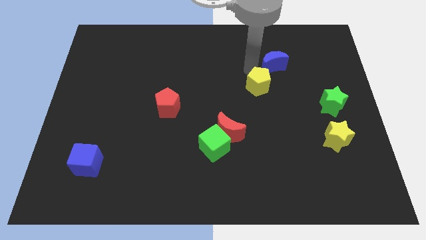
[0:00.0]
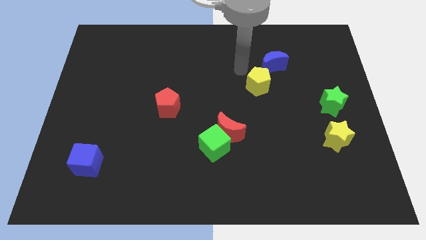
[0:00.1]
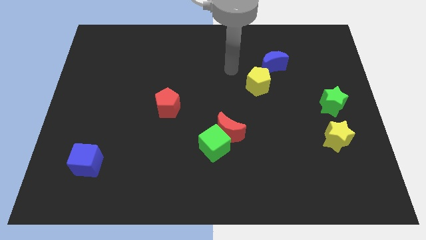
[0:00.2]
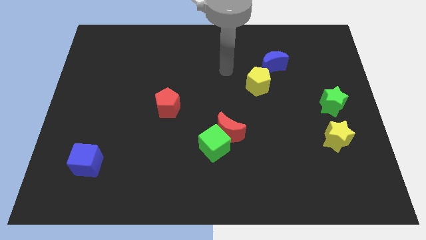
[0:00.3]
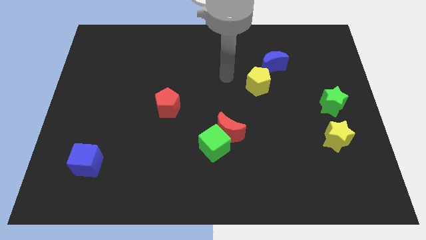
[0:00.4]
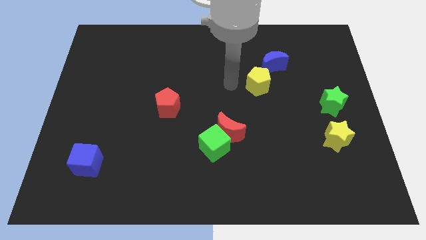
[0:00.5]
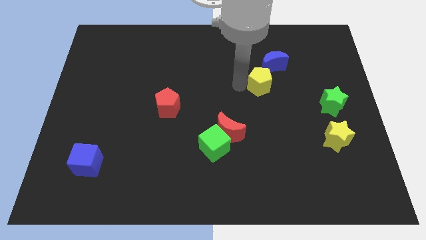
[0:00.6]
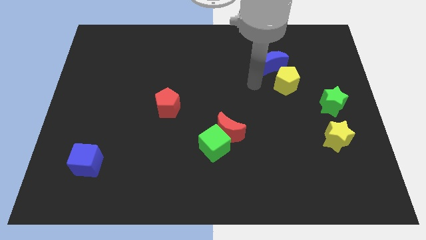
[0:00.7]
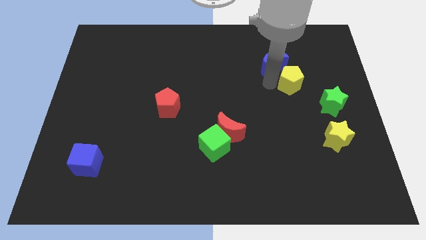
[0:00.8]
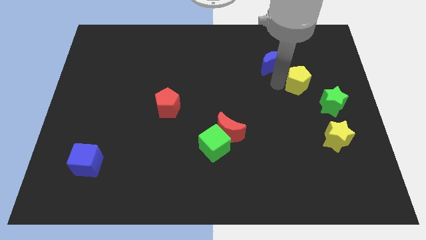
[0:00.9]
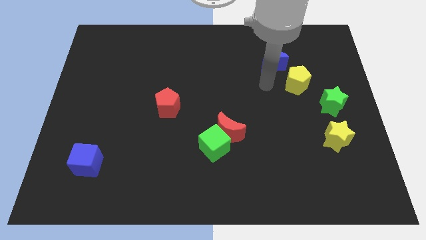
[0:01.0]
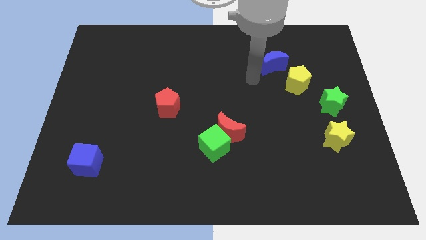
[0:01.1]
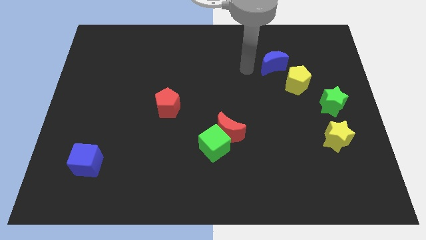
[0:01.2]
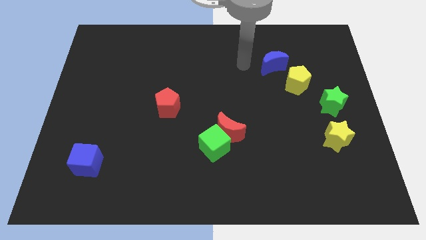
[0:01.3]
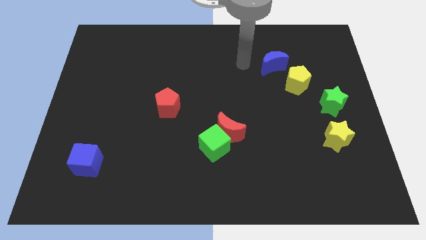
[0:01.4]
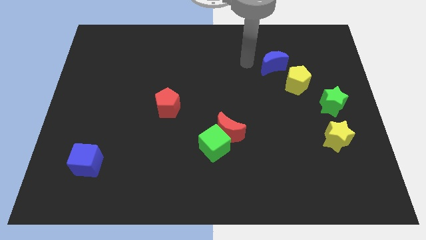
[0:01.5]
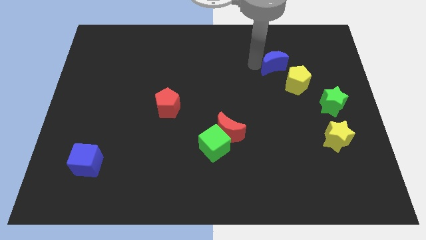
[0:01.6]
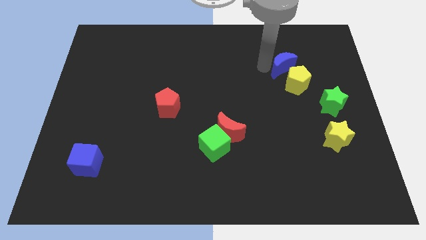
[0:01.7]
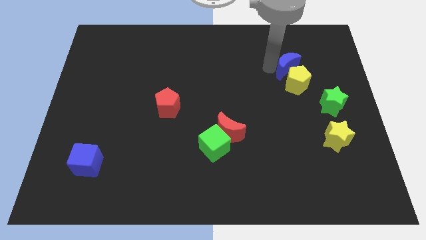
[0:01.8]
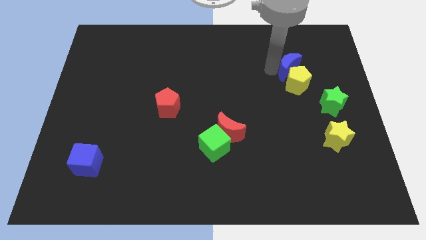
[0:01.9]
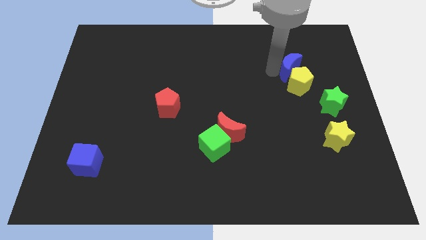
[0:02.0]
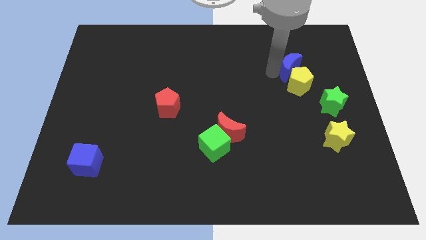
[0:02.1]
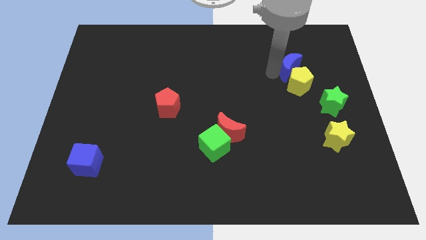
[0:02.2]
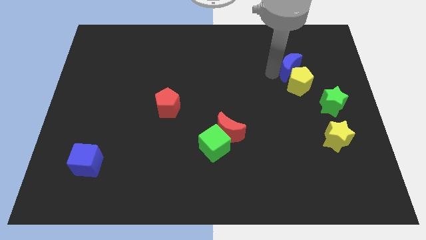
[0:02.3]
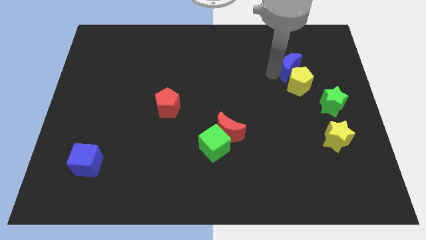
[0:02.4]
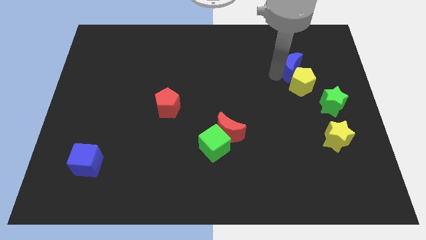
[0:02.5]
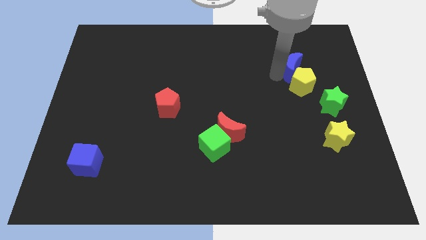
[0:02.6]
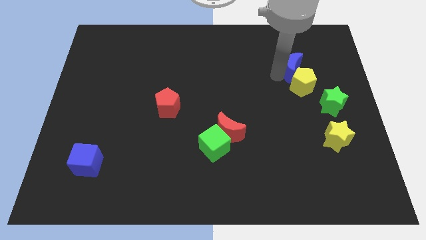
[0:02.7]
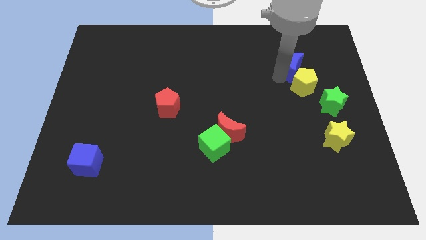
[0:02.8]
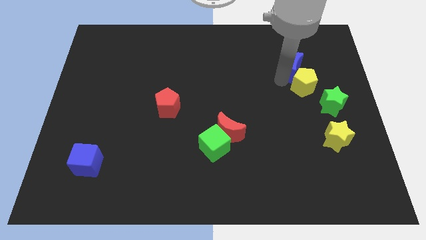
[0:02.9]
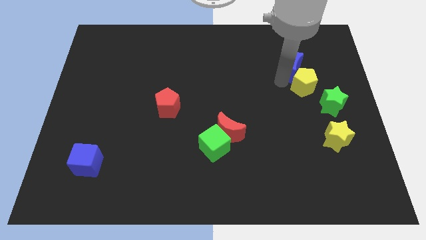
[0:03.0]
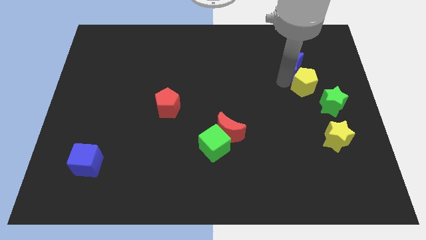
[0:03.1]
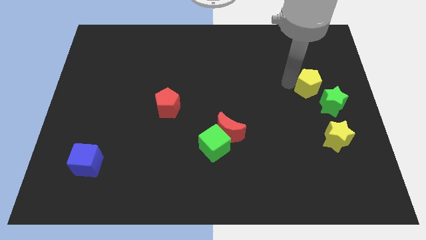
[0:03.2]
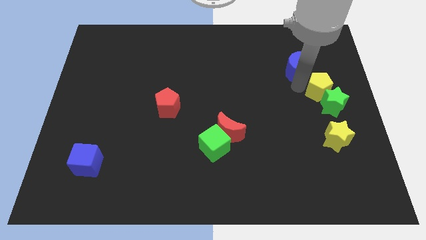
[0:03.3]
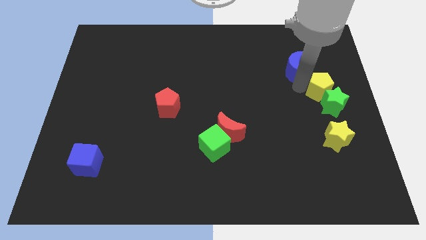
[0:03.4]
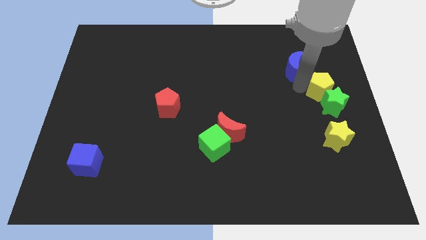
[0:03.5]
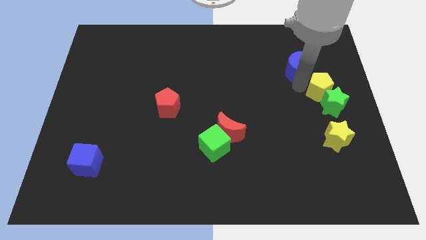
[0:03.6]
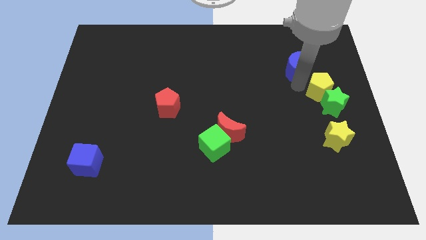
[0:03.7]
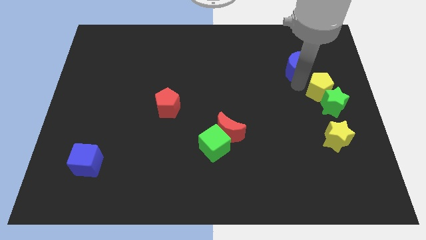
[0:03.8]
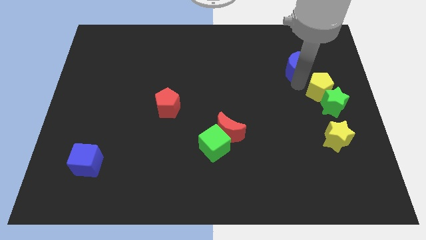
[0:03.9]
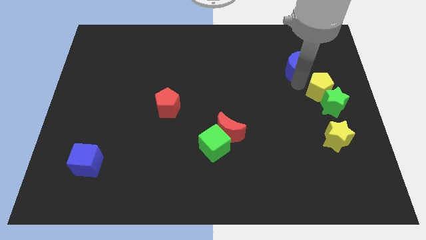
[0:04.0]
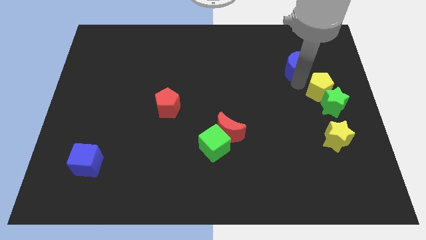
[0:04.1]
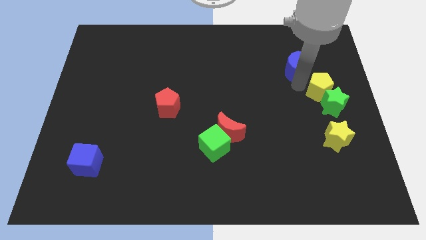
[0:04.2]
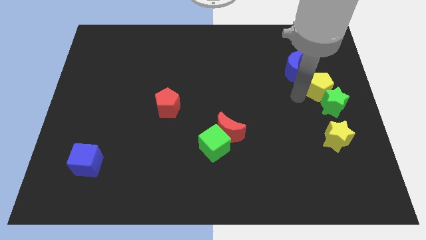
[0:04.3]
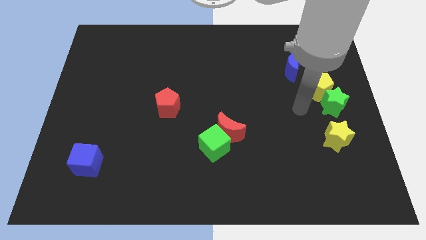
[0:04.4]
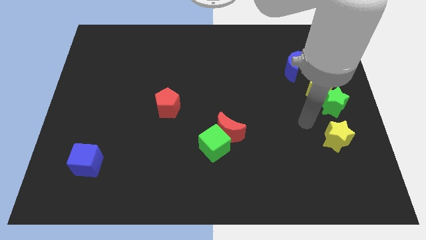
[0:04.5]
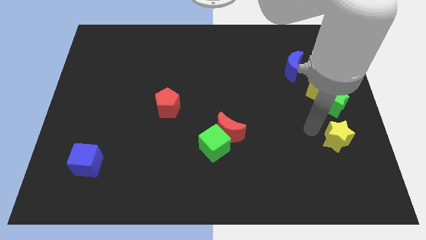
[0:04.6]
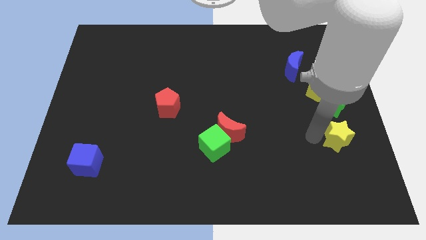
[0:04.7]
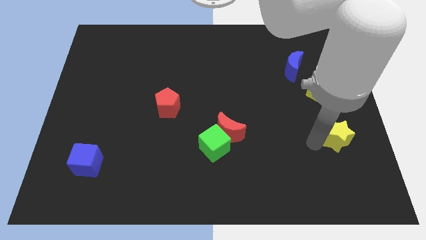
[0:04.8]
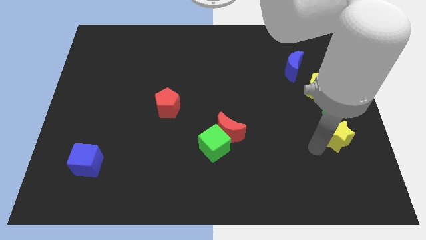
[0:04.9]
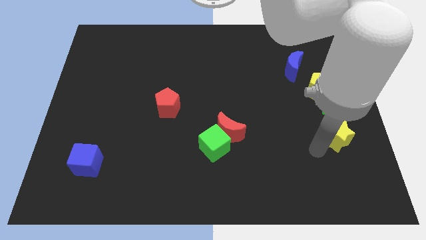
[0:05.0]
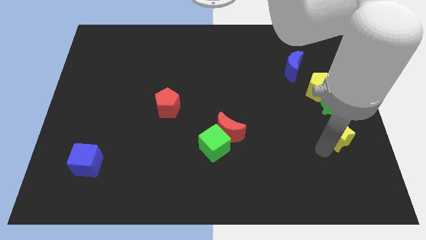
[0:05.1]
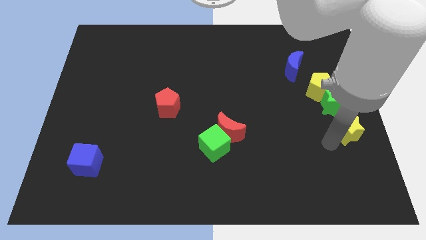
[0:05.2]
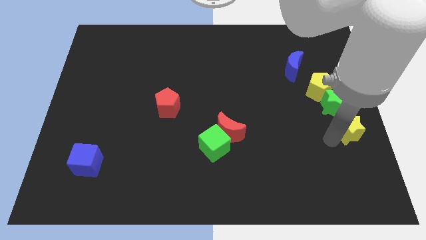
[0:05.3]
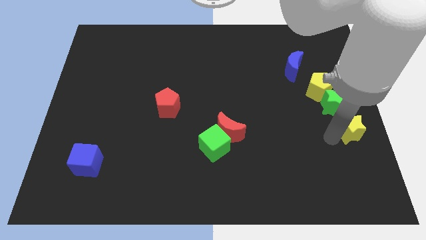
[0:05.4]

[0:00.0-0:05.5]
push the blue moon into the yellow pentagon

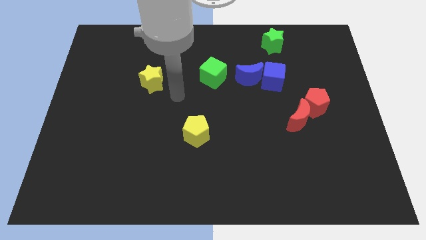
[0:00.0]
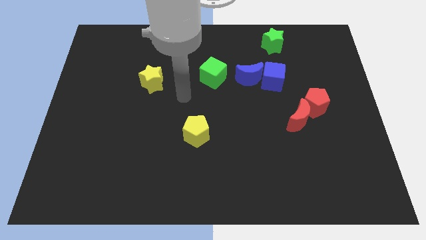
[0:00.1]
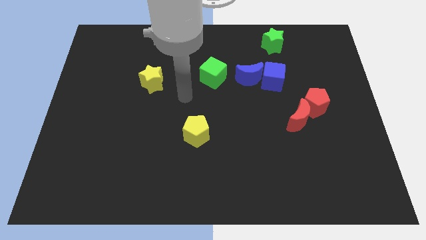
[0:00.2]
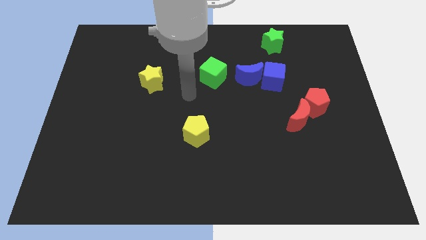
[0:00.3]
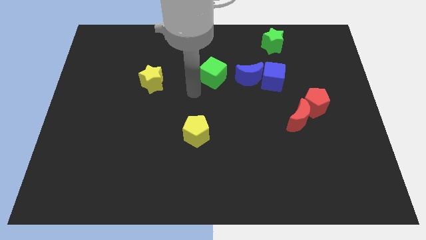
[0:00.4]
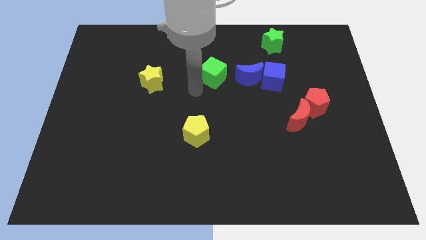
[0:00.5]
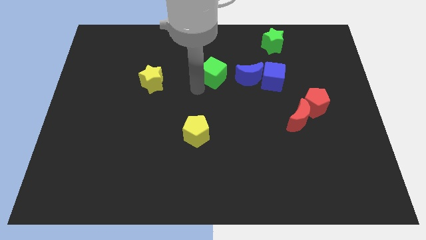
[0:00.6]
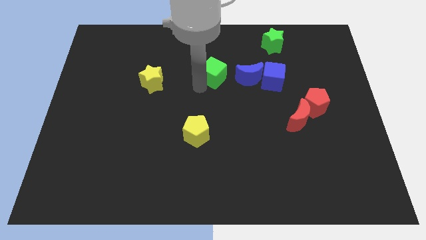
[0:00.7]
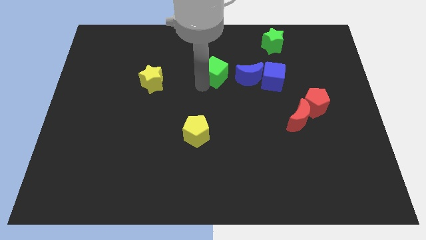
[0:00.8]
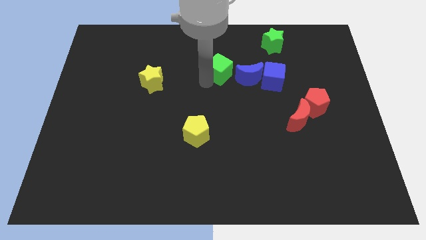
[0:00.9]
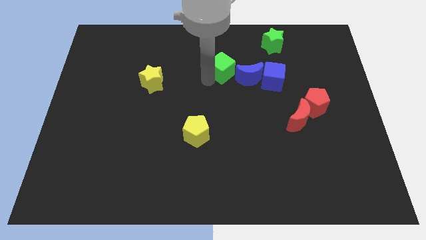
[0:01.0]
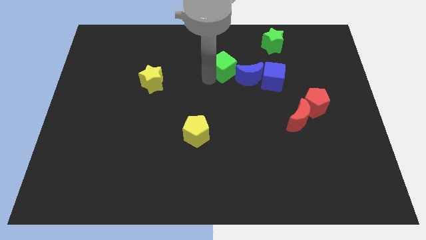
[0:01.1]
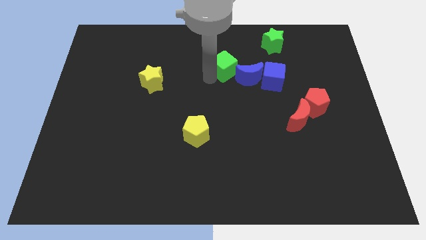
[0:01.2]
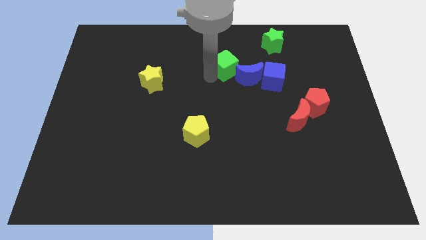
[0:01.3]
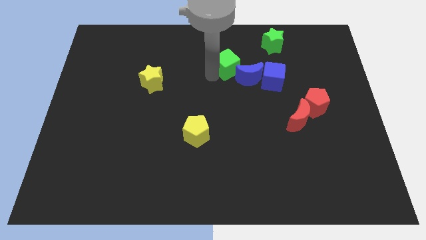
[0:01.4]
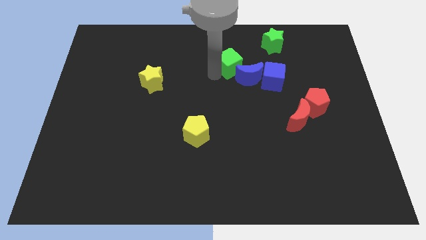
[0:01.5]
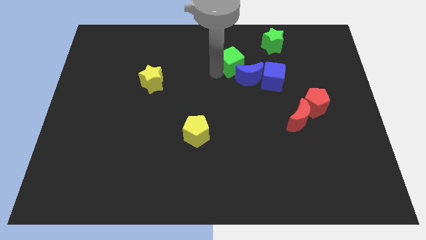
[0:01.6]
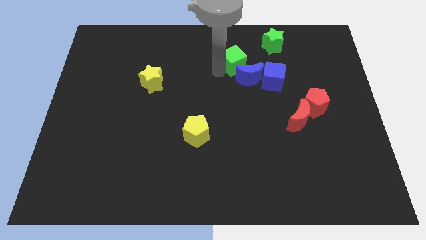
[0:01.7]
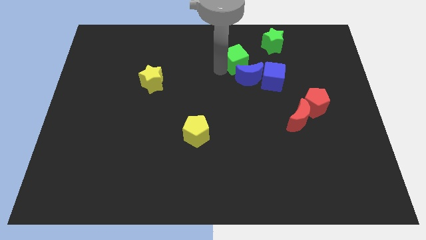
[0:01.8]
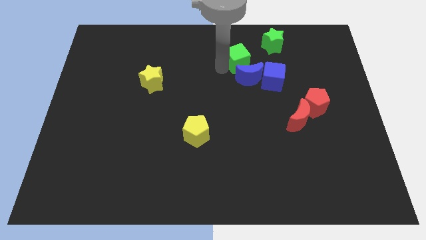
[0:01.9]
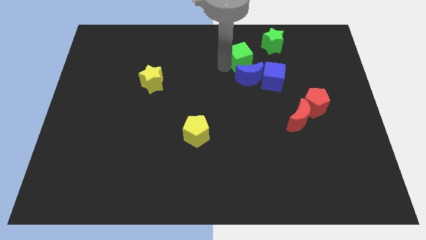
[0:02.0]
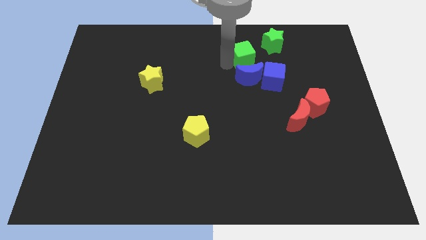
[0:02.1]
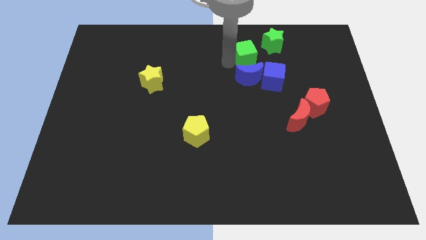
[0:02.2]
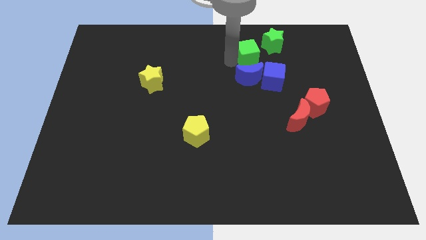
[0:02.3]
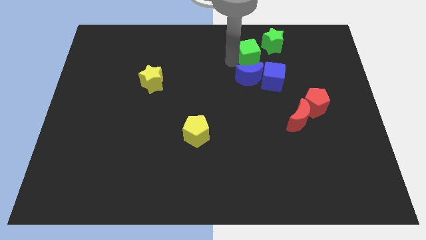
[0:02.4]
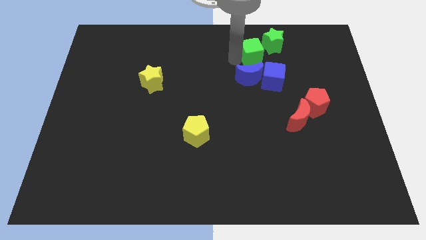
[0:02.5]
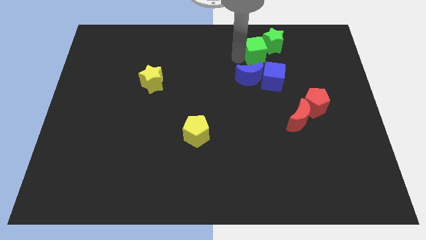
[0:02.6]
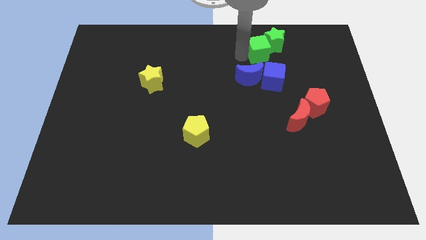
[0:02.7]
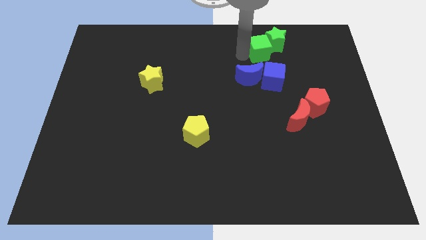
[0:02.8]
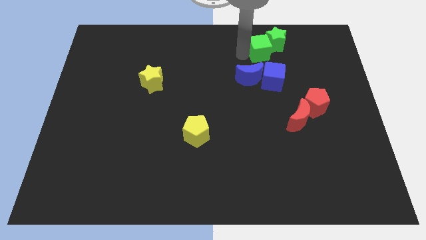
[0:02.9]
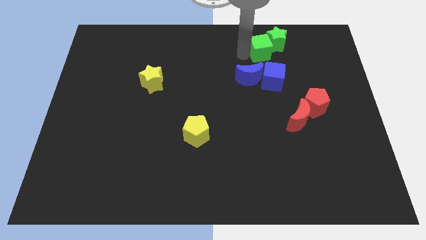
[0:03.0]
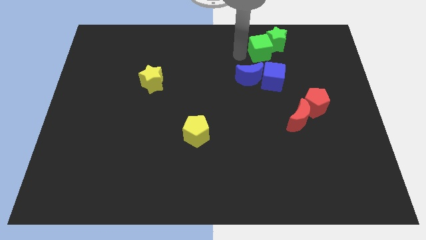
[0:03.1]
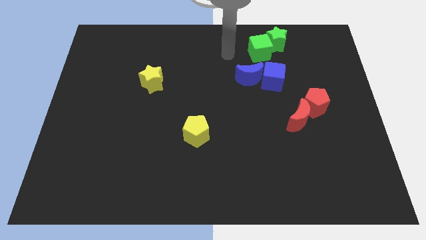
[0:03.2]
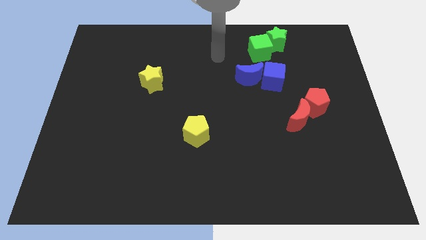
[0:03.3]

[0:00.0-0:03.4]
push the green cube into the green star
